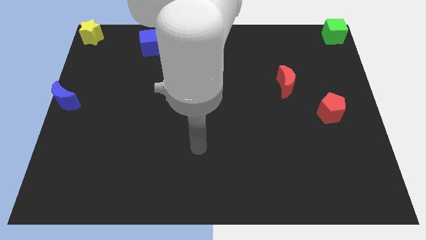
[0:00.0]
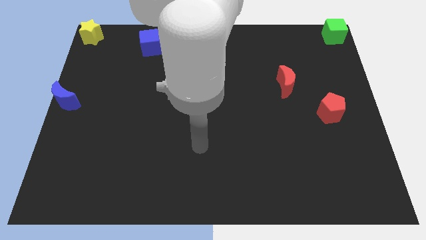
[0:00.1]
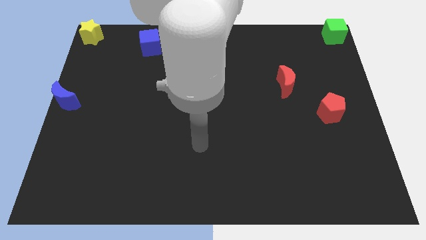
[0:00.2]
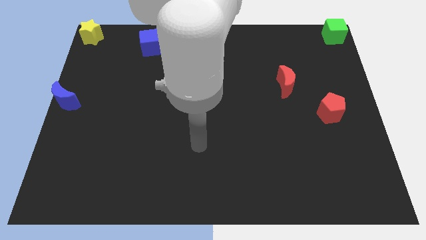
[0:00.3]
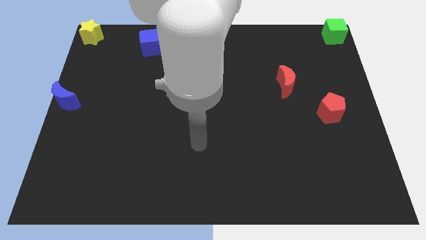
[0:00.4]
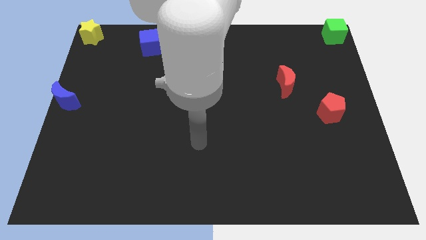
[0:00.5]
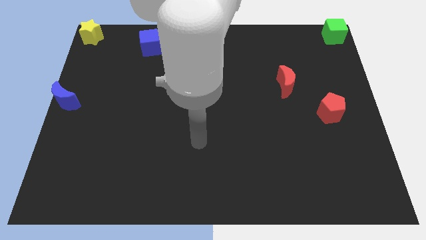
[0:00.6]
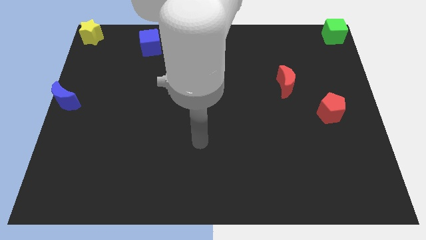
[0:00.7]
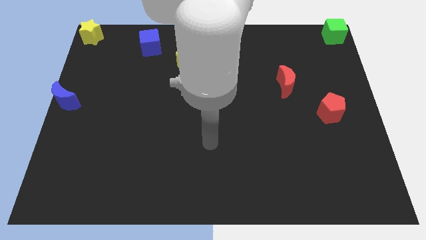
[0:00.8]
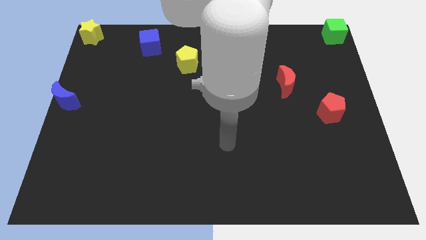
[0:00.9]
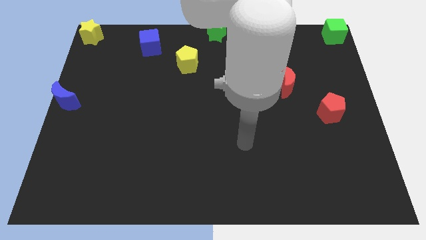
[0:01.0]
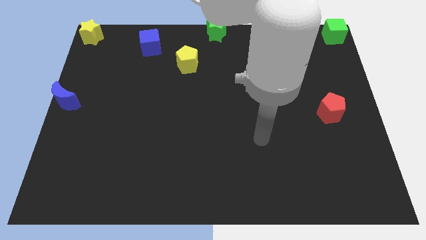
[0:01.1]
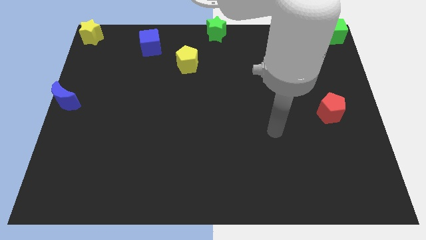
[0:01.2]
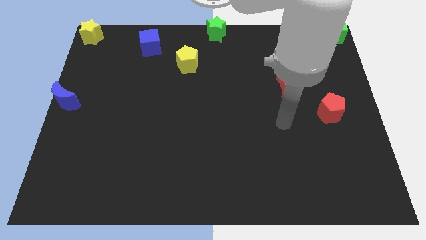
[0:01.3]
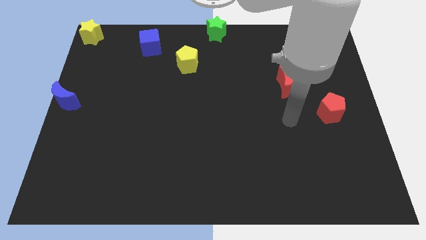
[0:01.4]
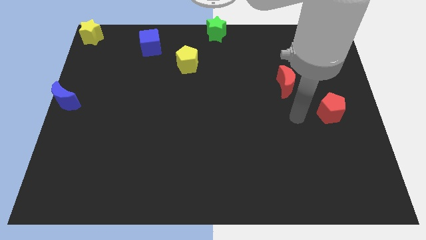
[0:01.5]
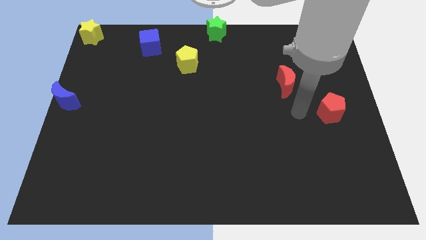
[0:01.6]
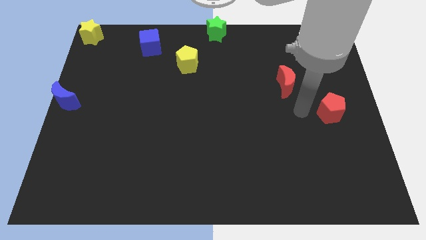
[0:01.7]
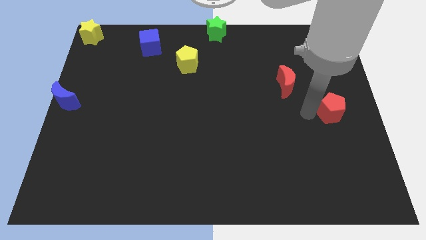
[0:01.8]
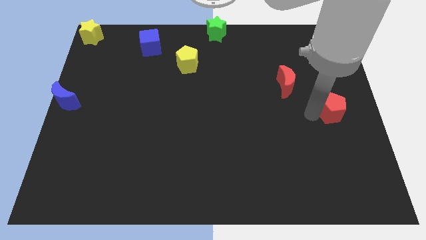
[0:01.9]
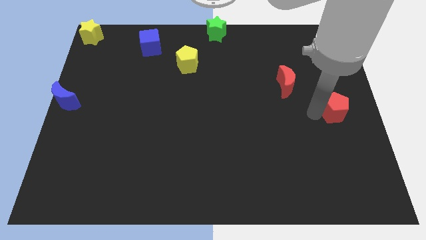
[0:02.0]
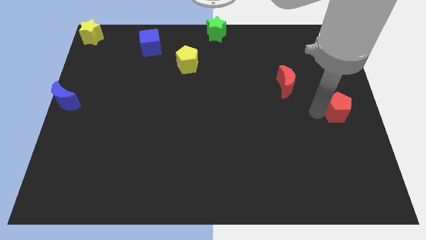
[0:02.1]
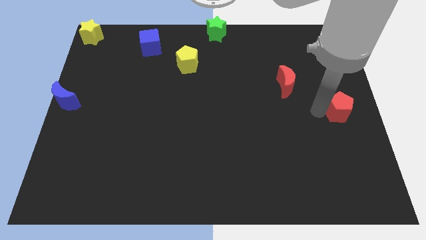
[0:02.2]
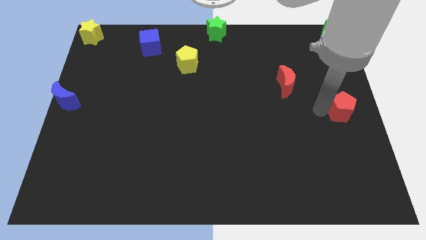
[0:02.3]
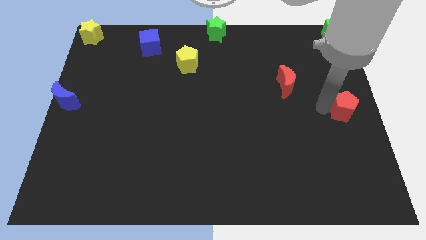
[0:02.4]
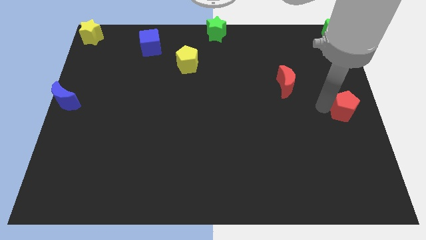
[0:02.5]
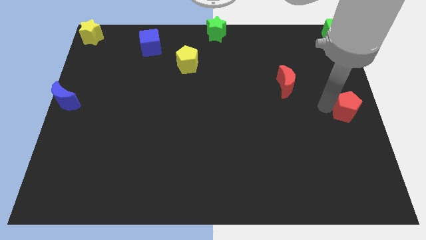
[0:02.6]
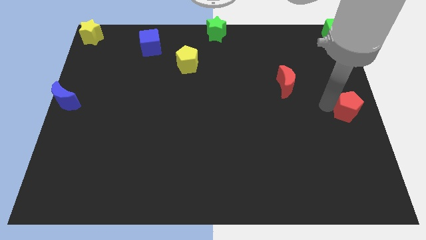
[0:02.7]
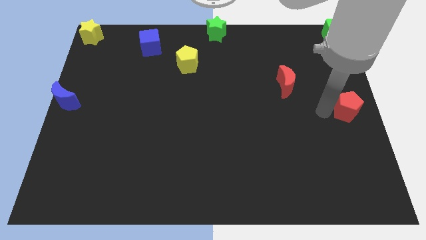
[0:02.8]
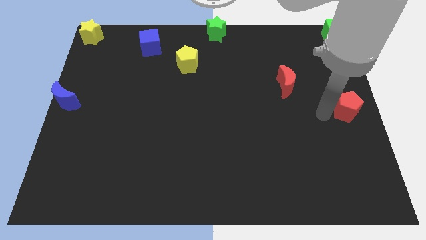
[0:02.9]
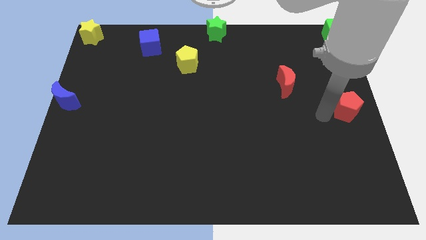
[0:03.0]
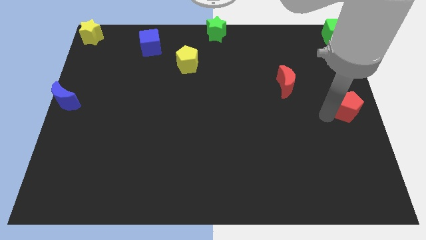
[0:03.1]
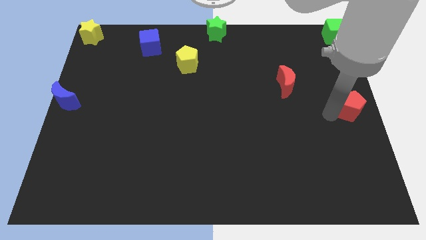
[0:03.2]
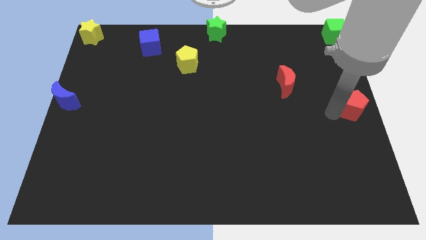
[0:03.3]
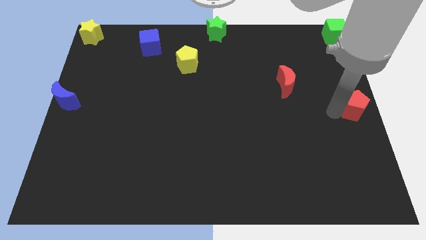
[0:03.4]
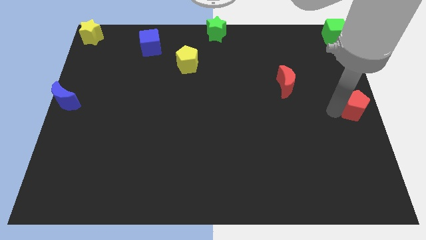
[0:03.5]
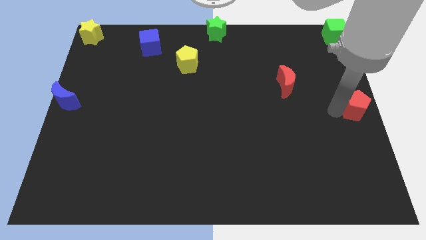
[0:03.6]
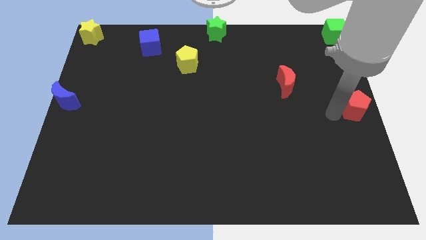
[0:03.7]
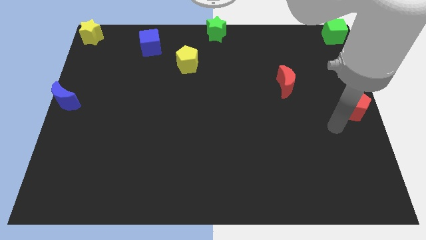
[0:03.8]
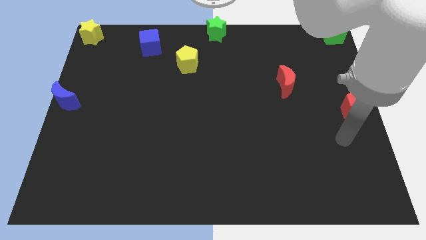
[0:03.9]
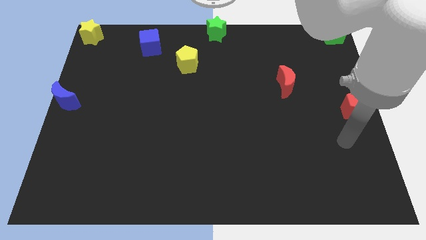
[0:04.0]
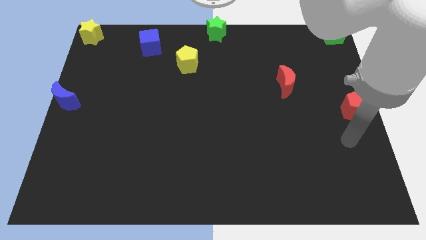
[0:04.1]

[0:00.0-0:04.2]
push red pentagon to the right center

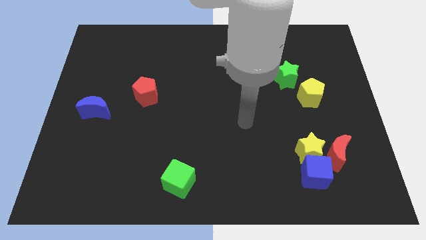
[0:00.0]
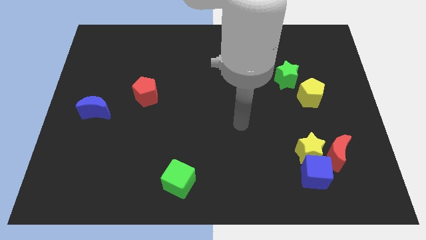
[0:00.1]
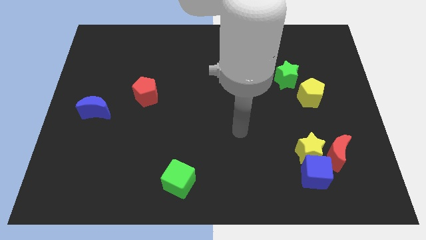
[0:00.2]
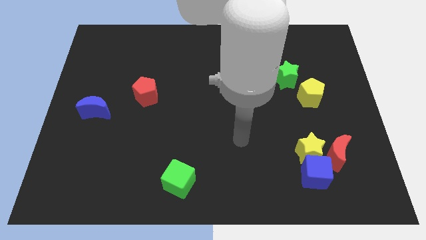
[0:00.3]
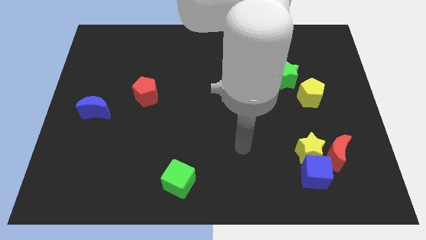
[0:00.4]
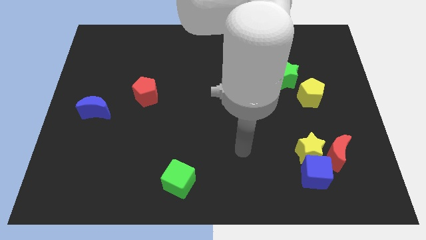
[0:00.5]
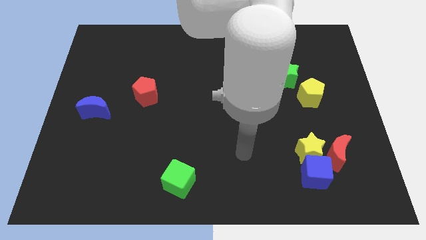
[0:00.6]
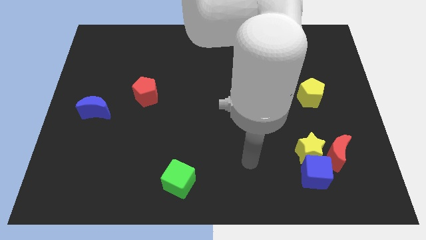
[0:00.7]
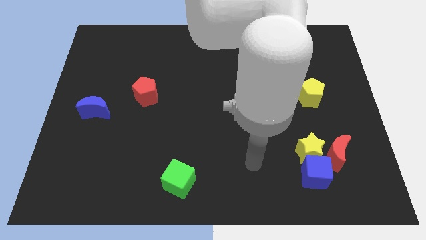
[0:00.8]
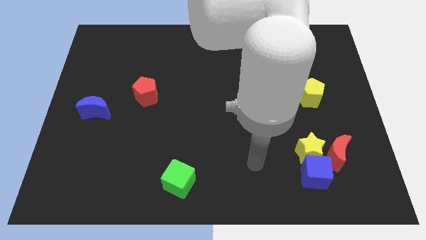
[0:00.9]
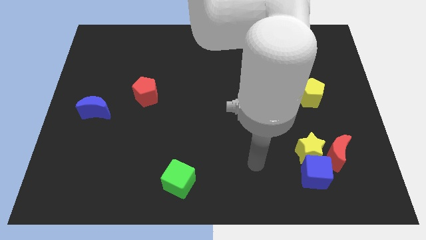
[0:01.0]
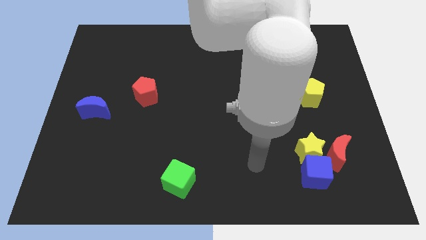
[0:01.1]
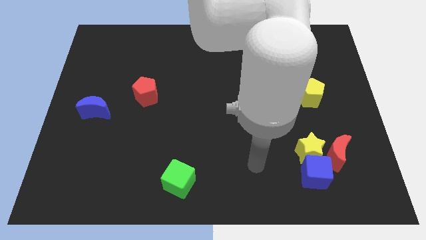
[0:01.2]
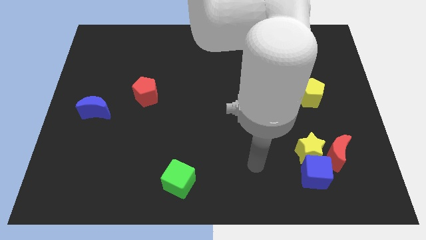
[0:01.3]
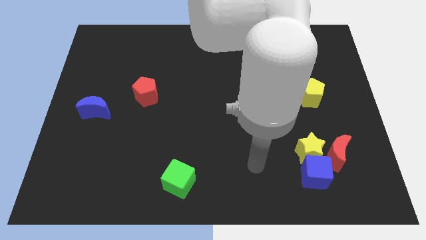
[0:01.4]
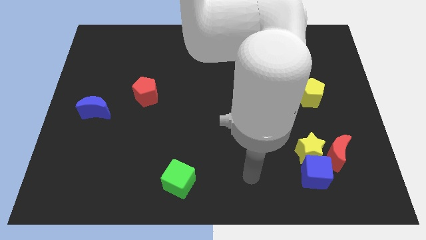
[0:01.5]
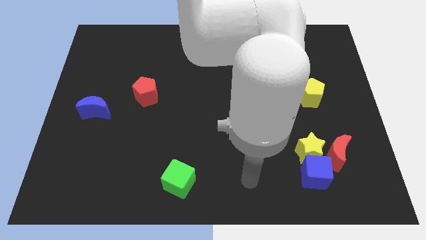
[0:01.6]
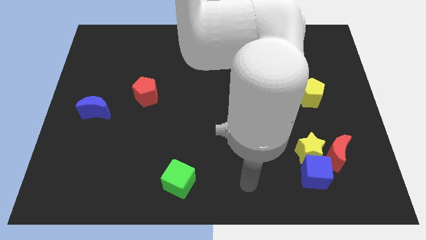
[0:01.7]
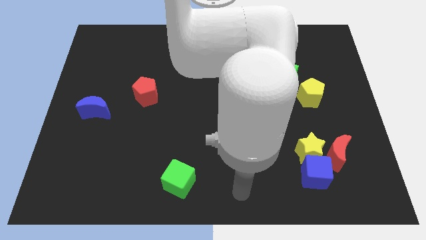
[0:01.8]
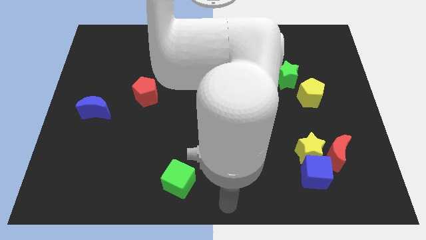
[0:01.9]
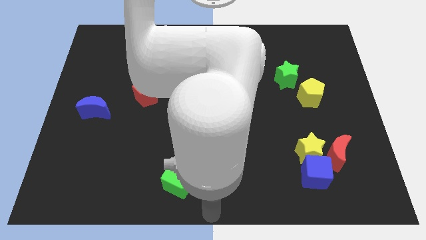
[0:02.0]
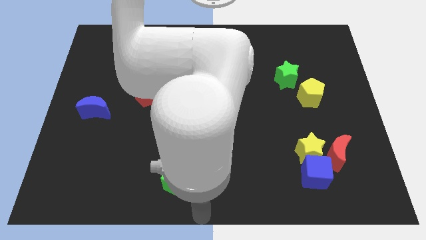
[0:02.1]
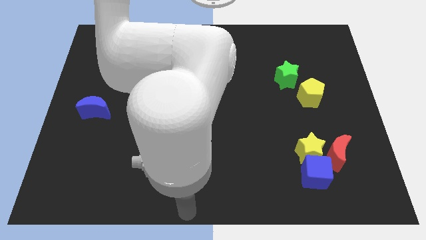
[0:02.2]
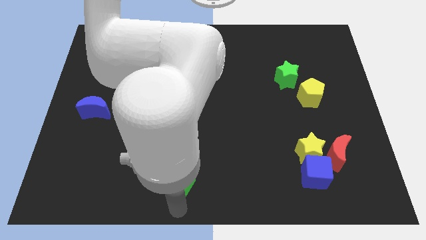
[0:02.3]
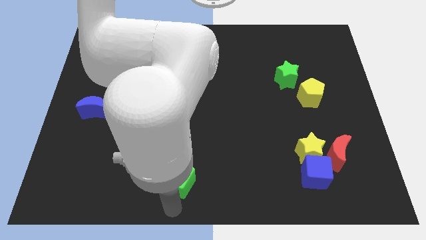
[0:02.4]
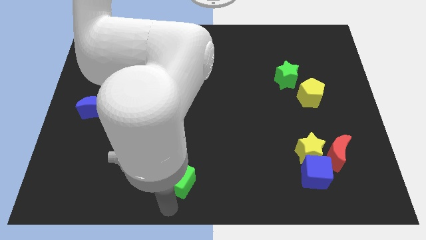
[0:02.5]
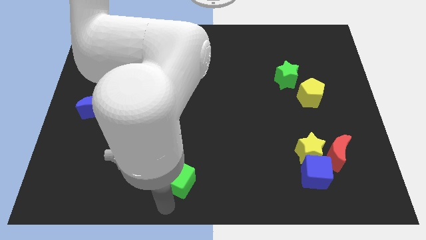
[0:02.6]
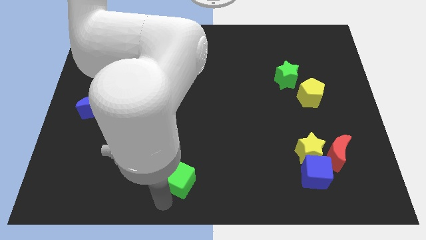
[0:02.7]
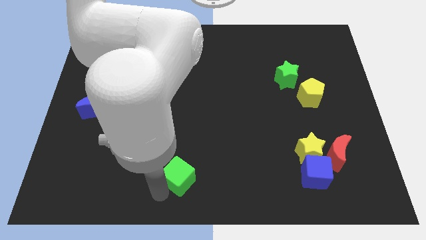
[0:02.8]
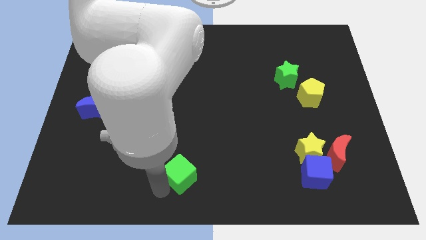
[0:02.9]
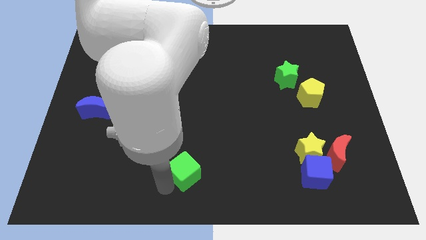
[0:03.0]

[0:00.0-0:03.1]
move the green cube slightly up

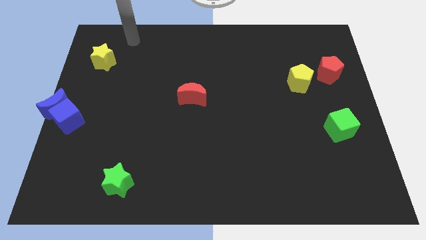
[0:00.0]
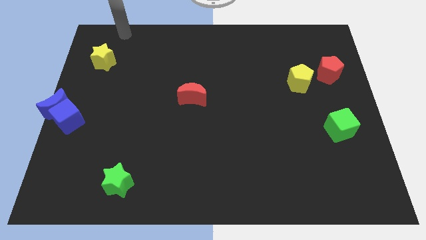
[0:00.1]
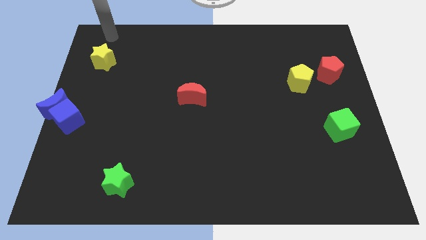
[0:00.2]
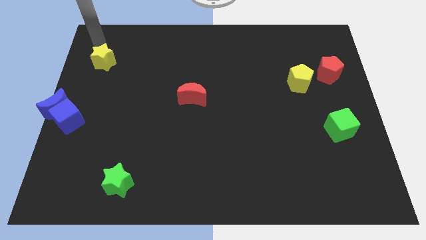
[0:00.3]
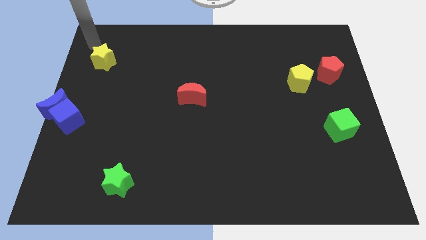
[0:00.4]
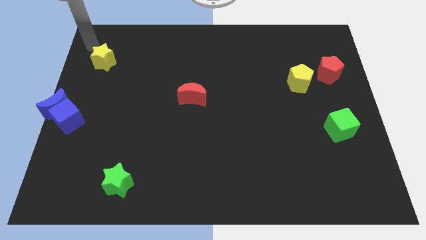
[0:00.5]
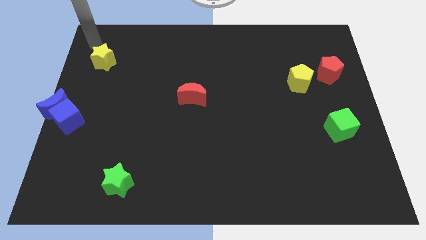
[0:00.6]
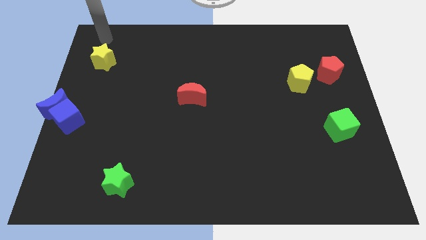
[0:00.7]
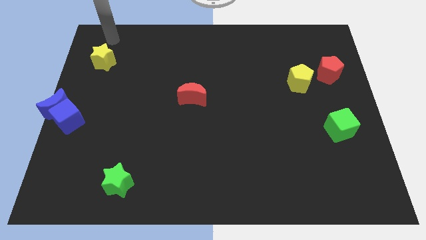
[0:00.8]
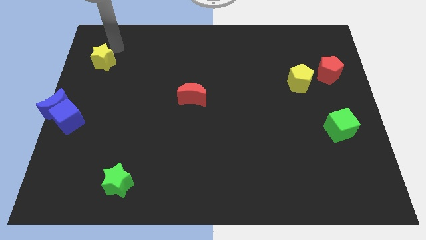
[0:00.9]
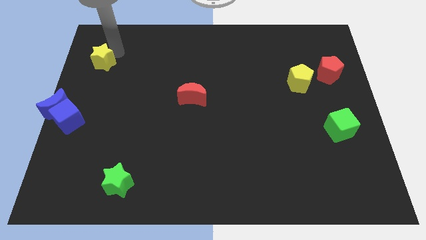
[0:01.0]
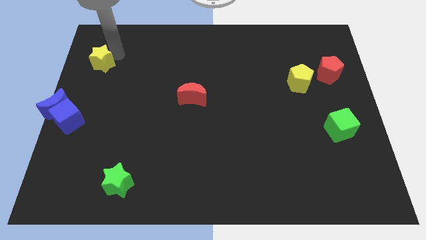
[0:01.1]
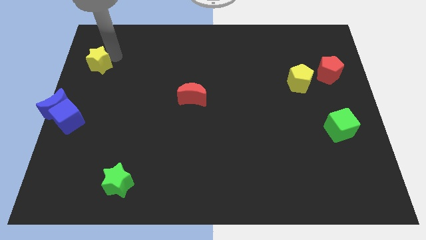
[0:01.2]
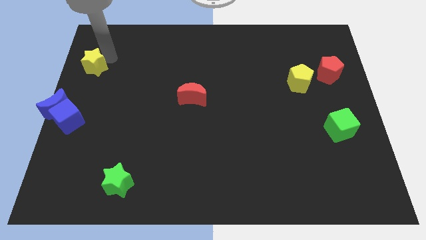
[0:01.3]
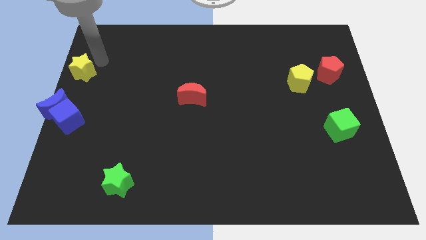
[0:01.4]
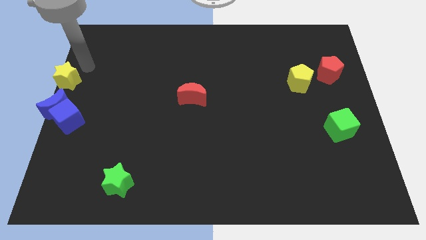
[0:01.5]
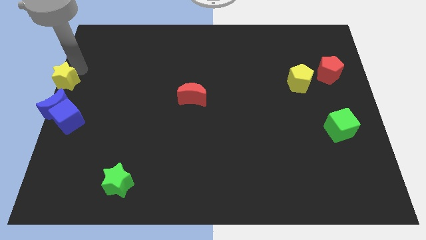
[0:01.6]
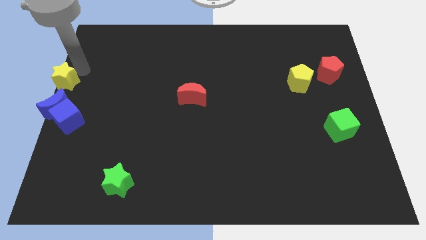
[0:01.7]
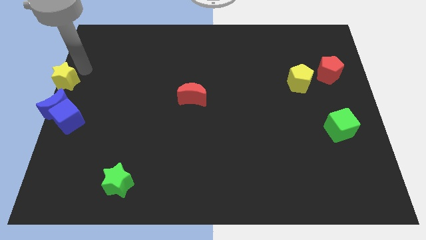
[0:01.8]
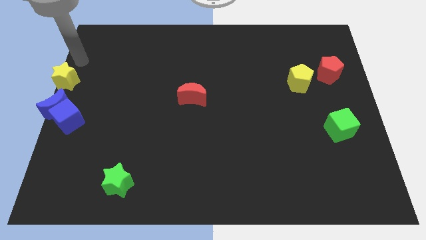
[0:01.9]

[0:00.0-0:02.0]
place yellow star to the top of blue moon
